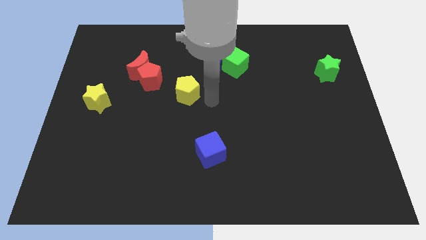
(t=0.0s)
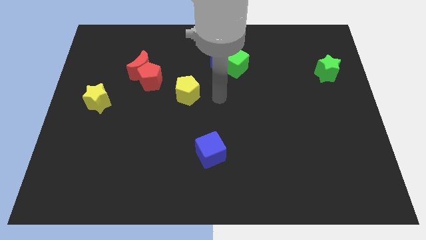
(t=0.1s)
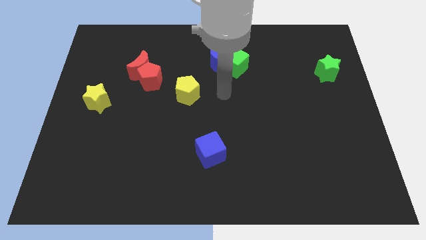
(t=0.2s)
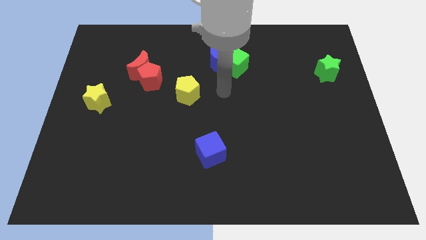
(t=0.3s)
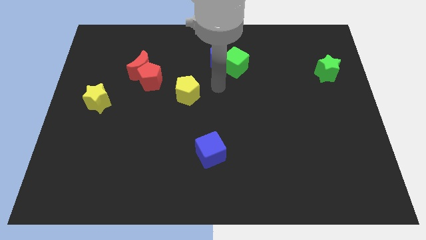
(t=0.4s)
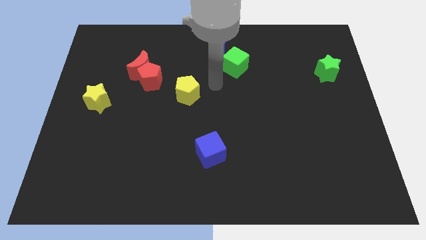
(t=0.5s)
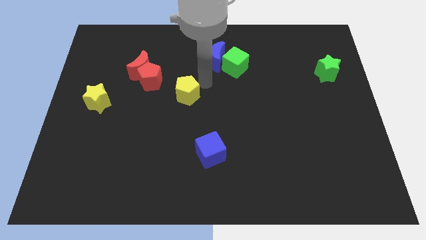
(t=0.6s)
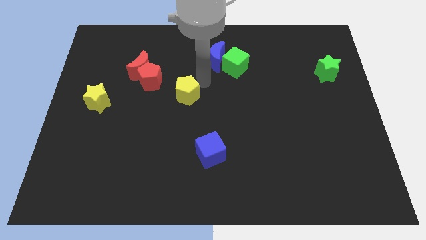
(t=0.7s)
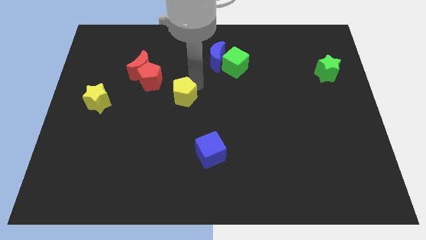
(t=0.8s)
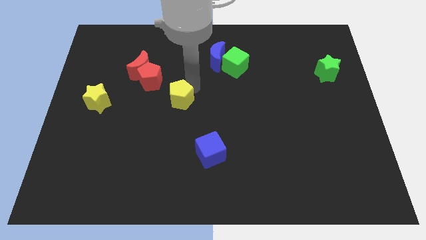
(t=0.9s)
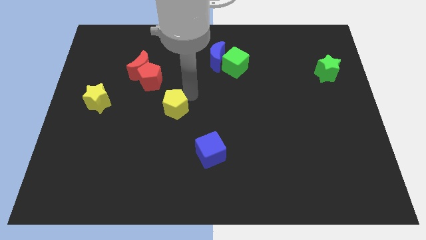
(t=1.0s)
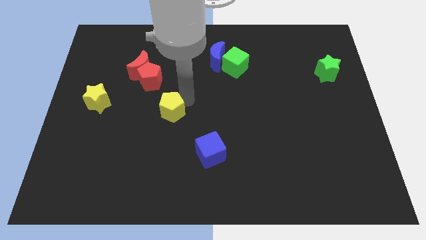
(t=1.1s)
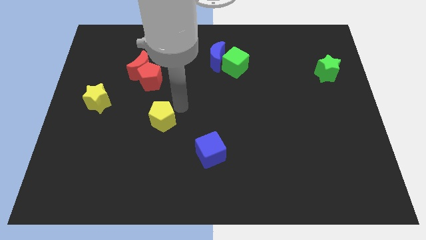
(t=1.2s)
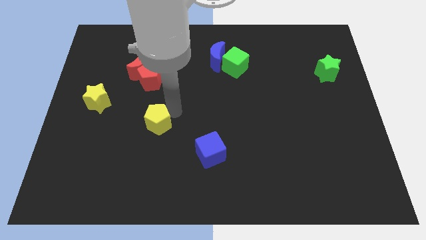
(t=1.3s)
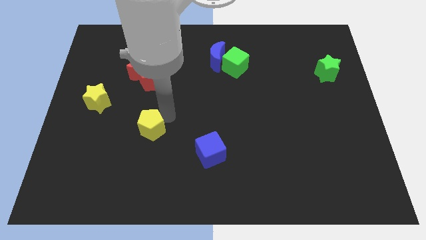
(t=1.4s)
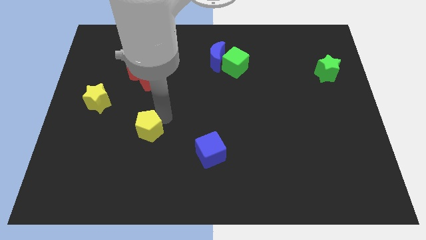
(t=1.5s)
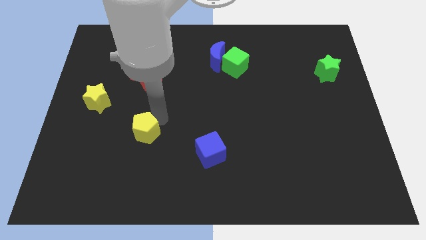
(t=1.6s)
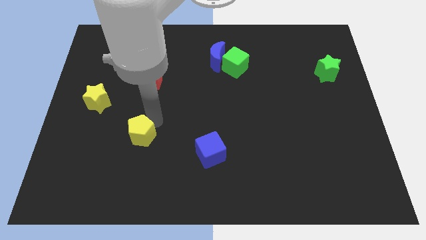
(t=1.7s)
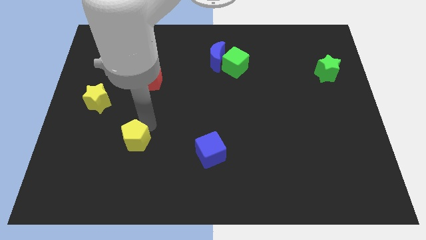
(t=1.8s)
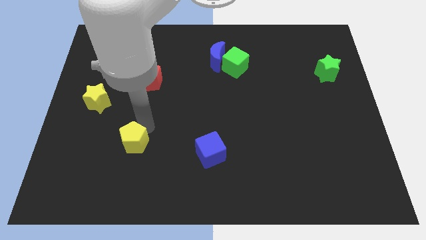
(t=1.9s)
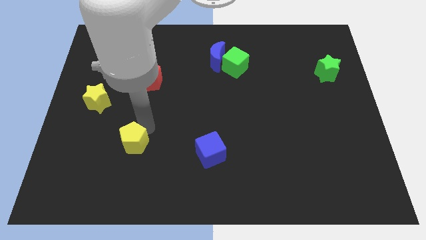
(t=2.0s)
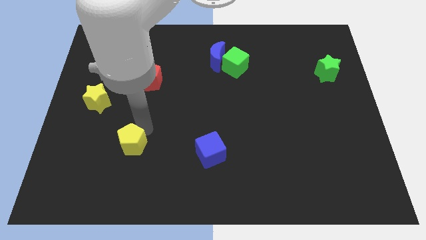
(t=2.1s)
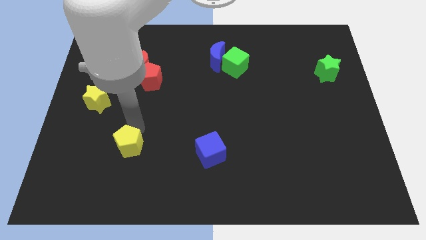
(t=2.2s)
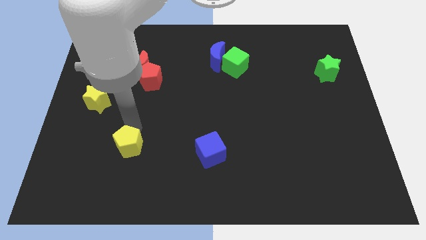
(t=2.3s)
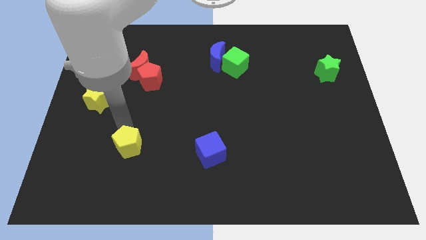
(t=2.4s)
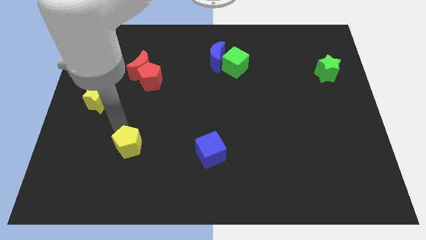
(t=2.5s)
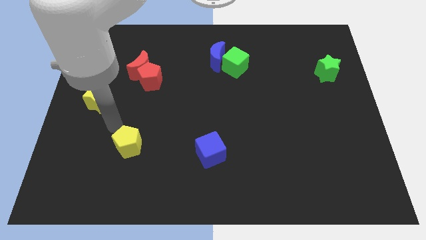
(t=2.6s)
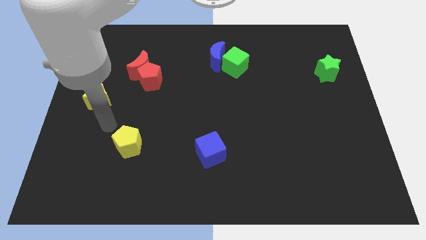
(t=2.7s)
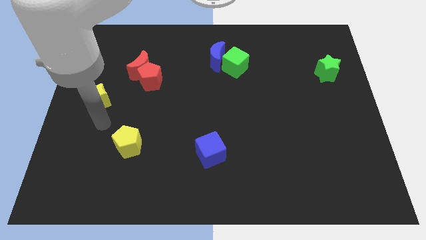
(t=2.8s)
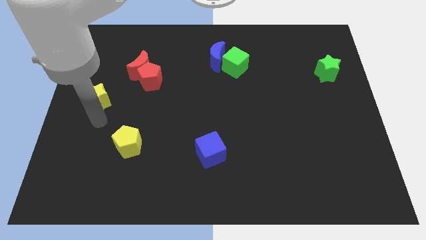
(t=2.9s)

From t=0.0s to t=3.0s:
place the yellow pentagon horizontally to the left side of the blue cube

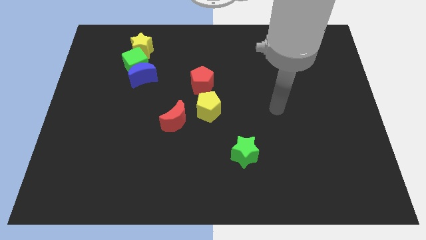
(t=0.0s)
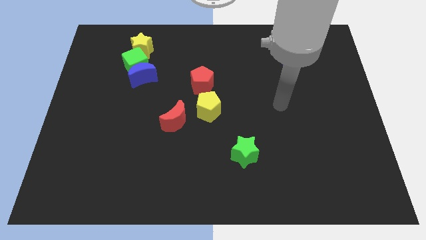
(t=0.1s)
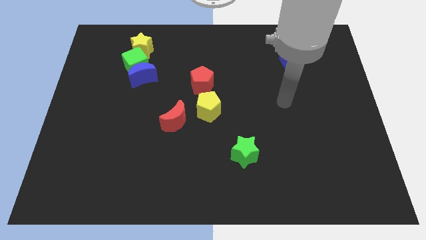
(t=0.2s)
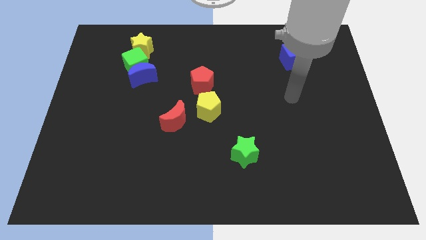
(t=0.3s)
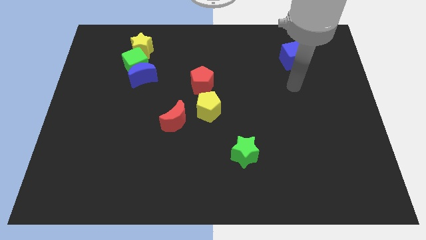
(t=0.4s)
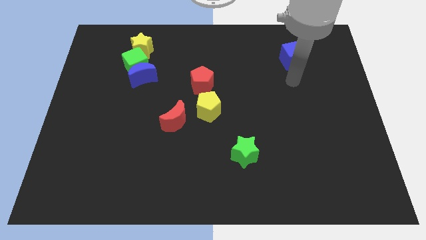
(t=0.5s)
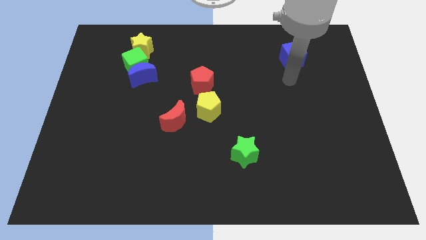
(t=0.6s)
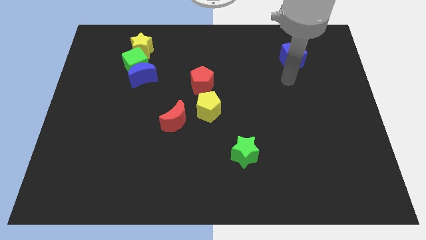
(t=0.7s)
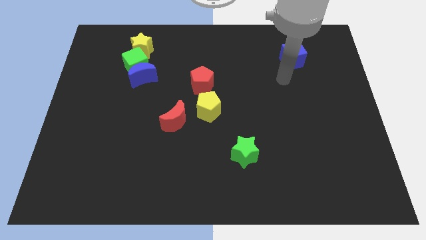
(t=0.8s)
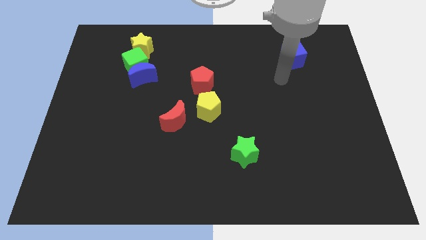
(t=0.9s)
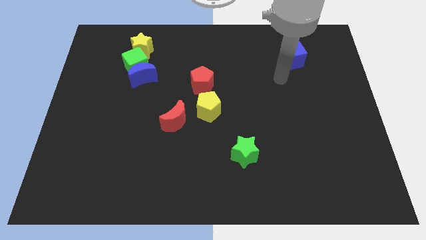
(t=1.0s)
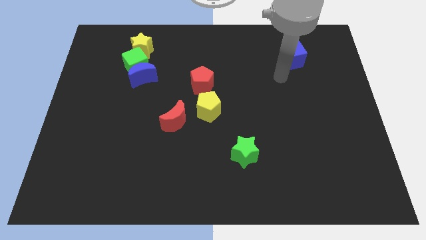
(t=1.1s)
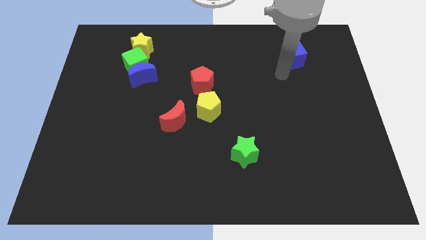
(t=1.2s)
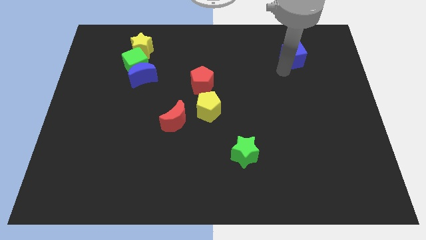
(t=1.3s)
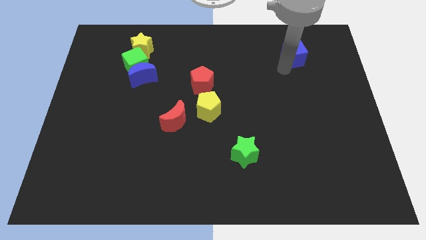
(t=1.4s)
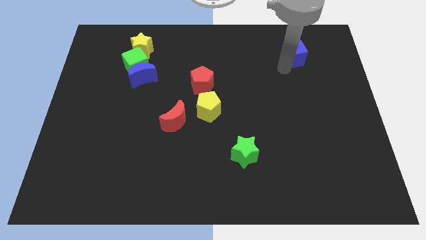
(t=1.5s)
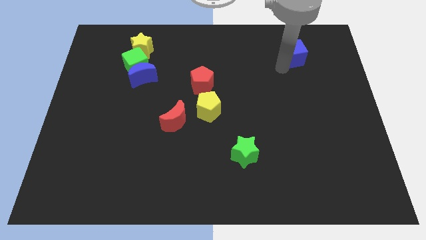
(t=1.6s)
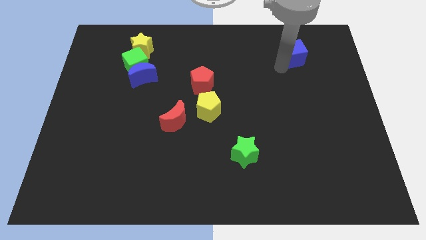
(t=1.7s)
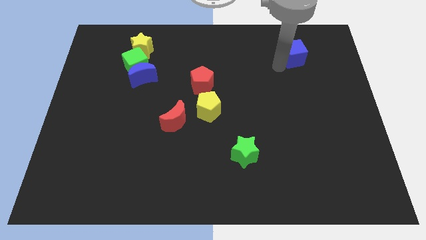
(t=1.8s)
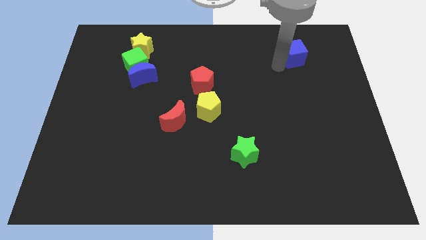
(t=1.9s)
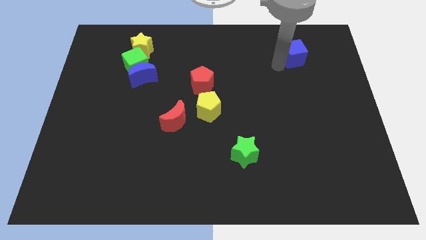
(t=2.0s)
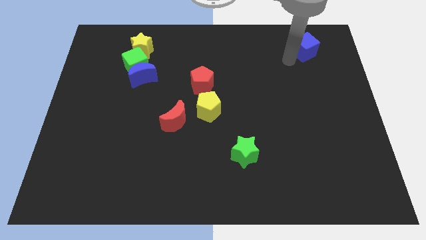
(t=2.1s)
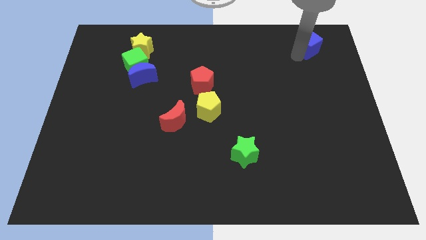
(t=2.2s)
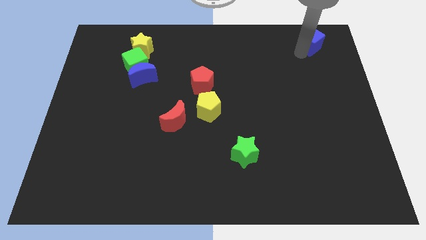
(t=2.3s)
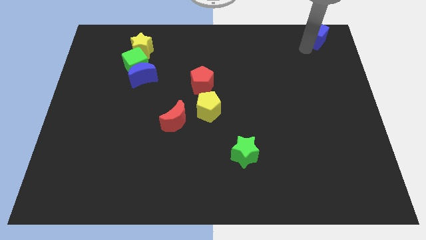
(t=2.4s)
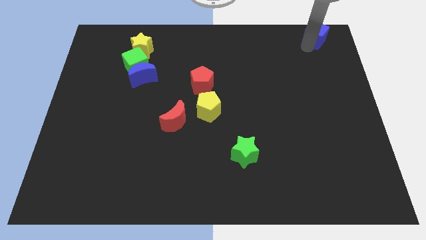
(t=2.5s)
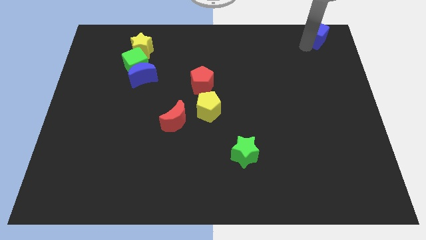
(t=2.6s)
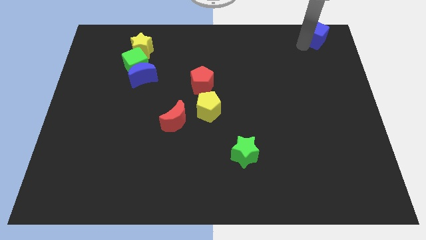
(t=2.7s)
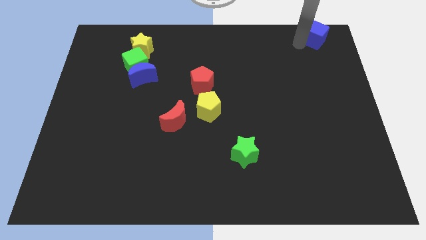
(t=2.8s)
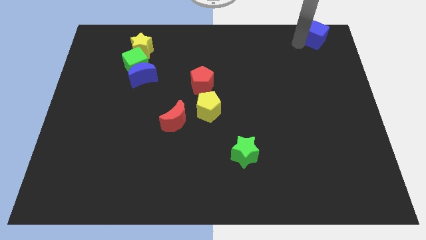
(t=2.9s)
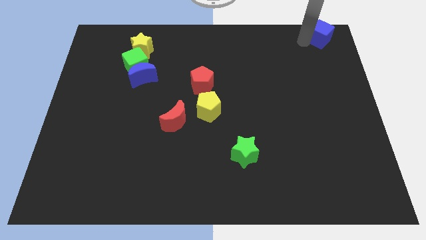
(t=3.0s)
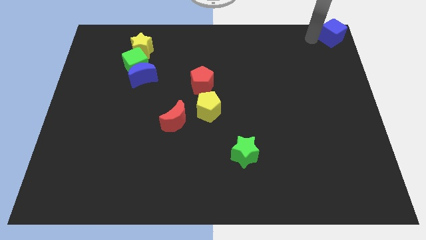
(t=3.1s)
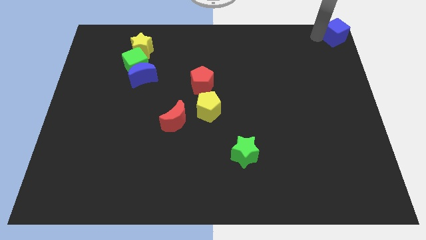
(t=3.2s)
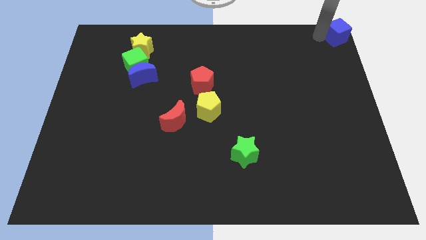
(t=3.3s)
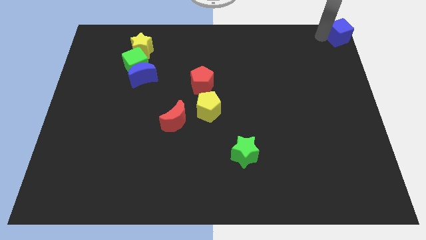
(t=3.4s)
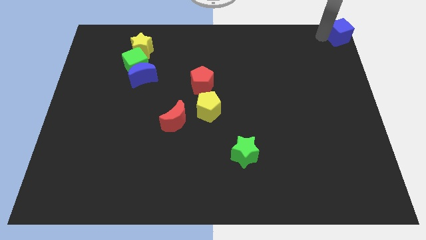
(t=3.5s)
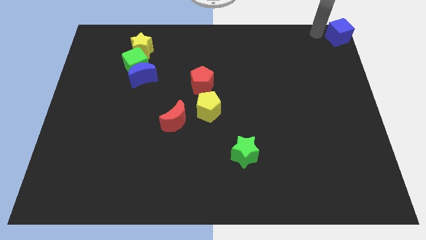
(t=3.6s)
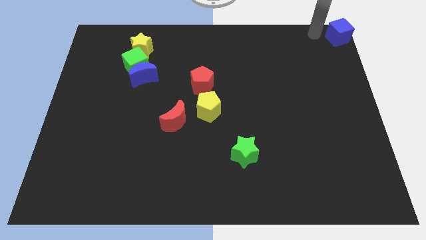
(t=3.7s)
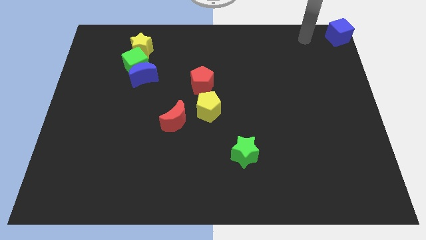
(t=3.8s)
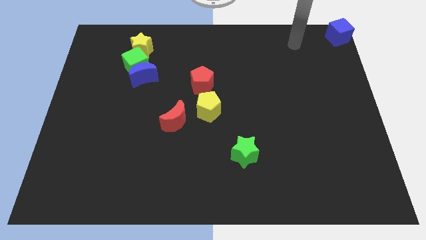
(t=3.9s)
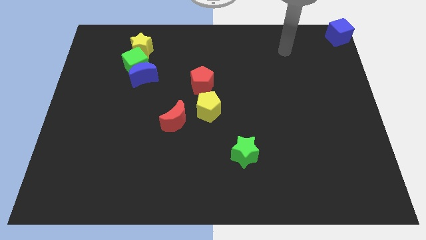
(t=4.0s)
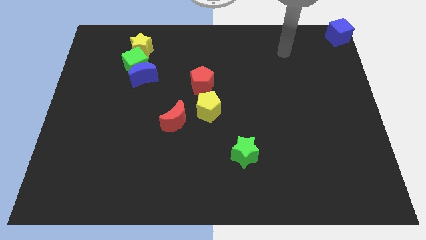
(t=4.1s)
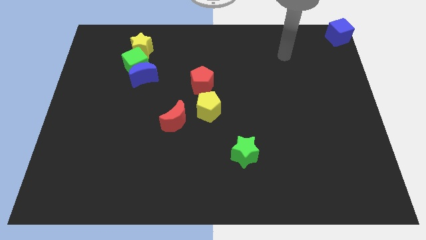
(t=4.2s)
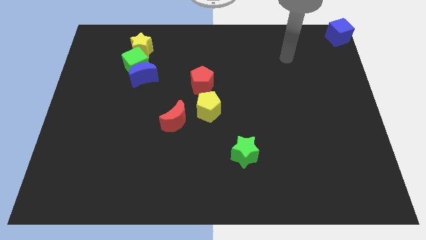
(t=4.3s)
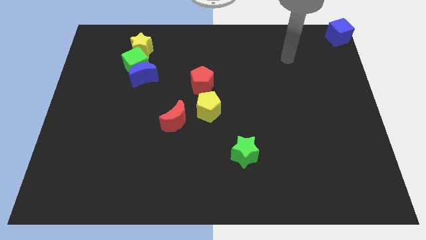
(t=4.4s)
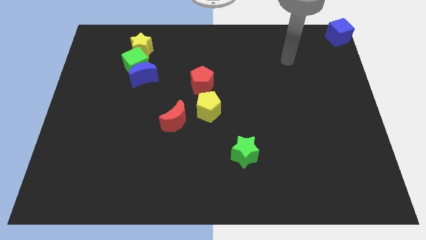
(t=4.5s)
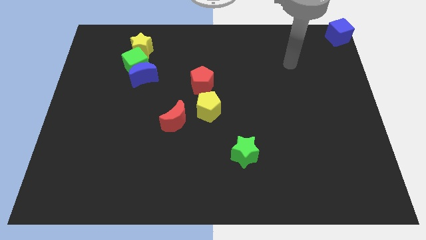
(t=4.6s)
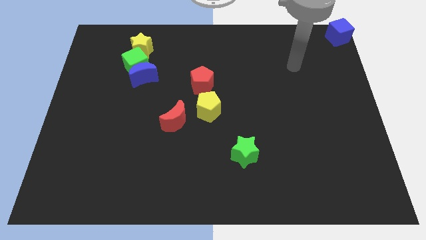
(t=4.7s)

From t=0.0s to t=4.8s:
move the blue cube to the top right of the board

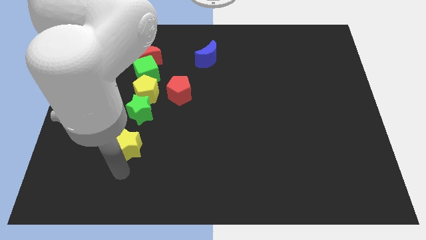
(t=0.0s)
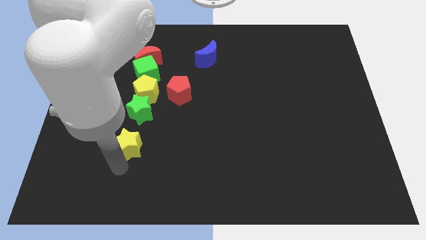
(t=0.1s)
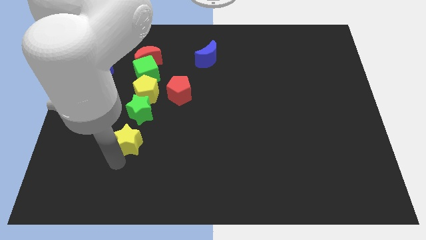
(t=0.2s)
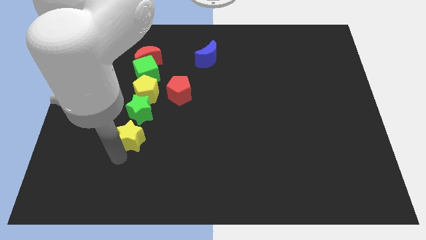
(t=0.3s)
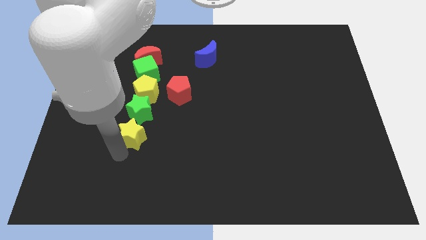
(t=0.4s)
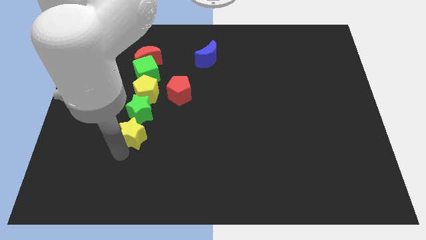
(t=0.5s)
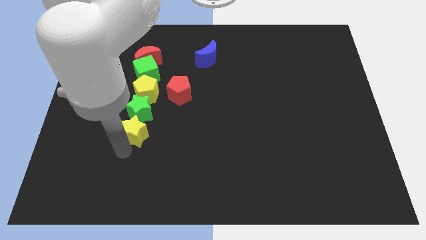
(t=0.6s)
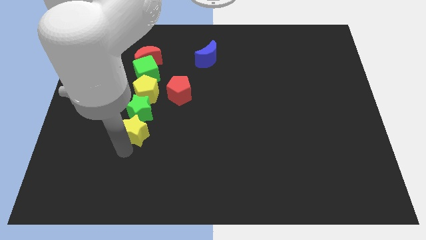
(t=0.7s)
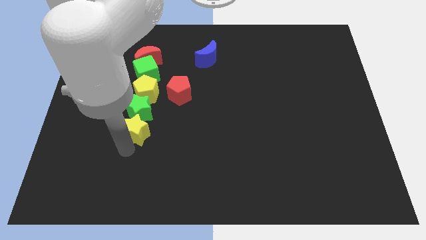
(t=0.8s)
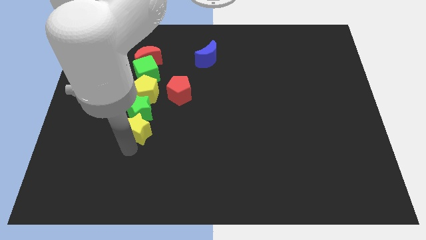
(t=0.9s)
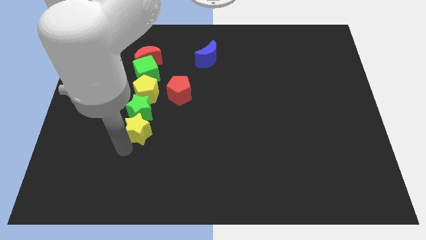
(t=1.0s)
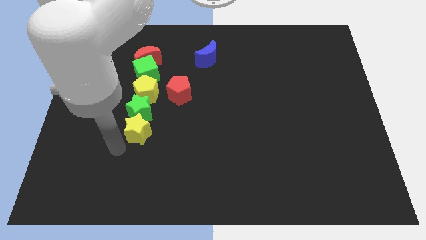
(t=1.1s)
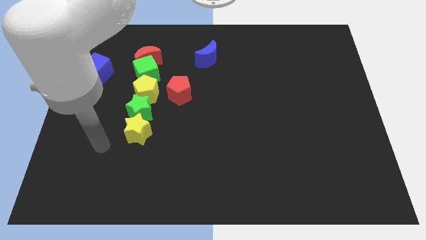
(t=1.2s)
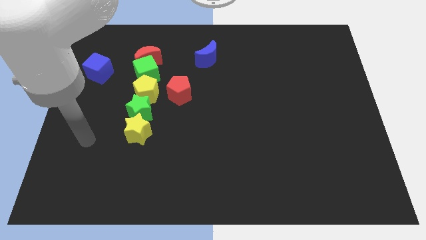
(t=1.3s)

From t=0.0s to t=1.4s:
slide the yellow star slightly towards up
